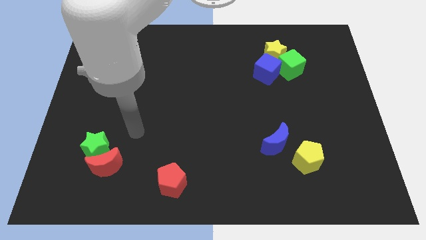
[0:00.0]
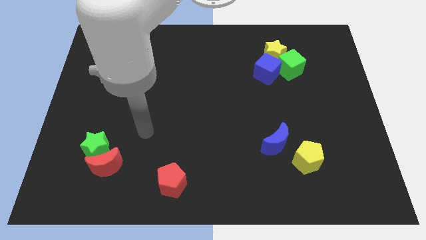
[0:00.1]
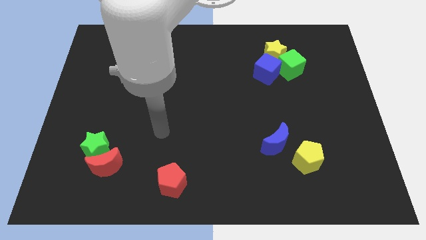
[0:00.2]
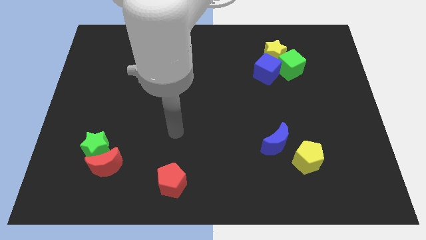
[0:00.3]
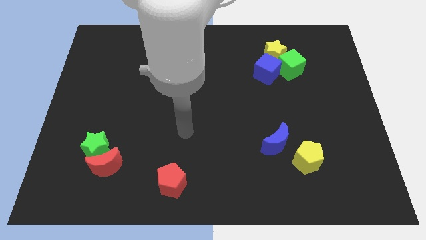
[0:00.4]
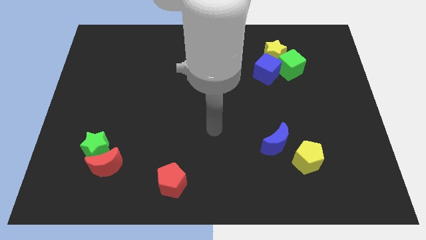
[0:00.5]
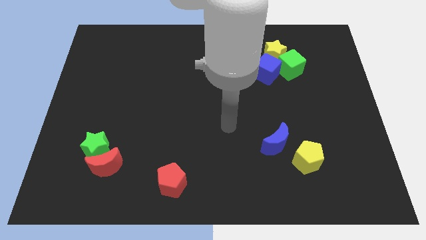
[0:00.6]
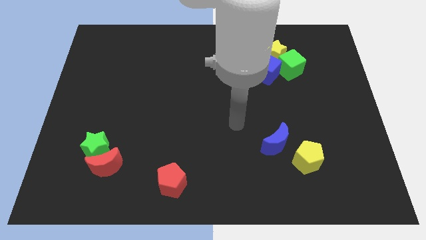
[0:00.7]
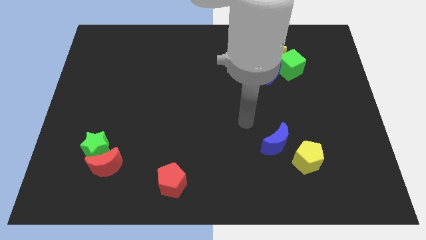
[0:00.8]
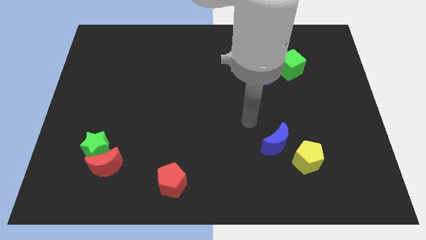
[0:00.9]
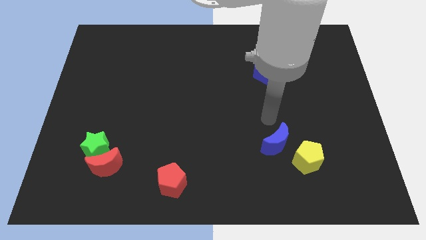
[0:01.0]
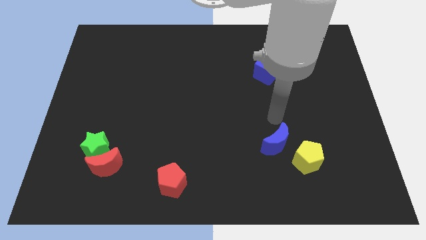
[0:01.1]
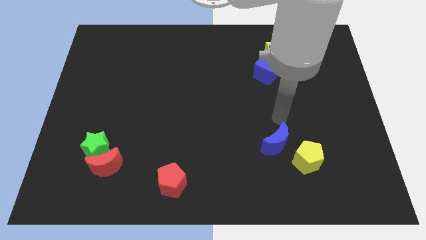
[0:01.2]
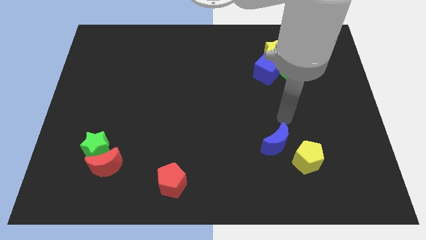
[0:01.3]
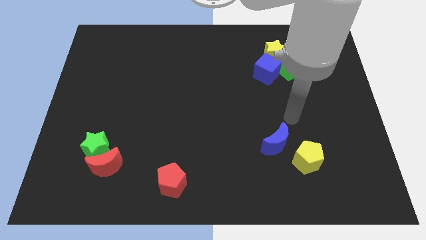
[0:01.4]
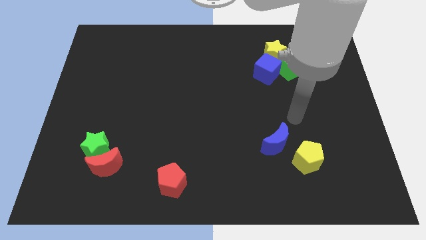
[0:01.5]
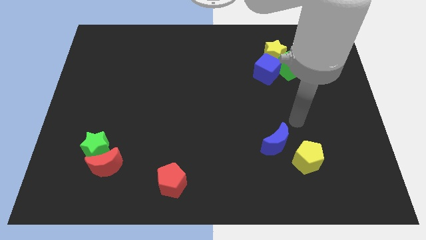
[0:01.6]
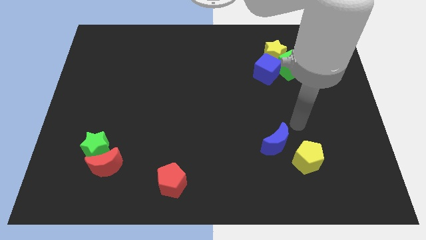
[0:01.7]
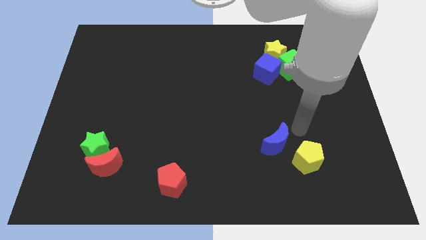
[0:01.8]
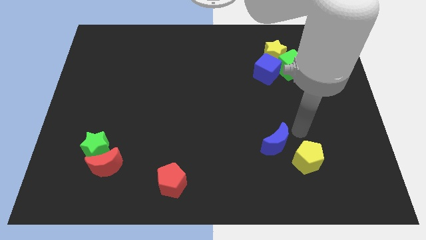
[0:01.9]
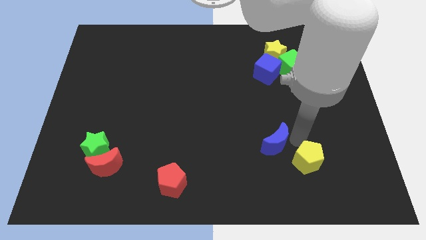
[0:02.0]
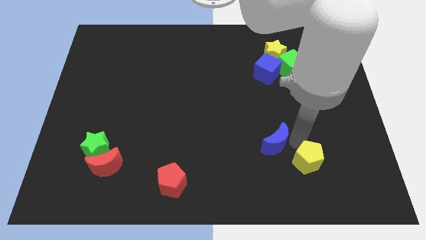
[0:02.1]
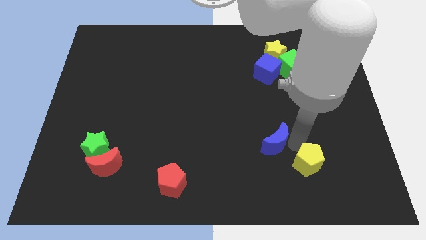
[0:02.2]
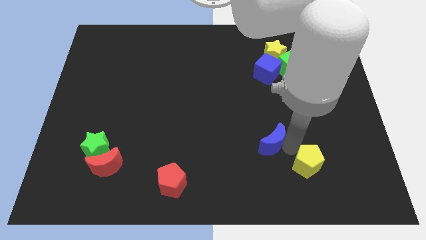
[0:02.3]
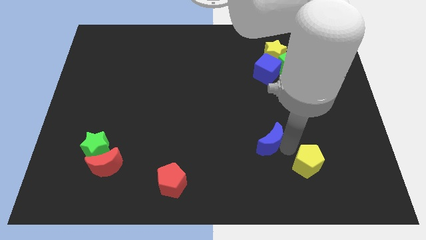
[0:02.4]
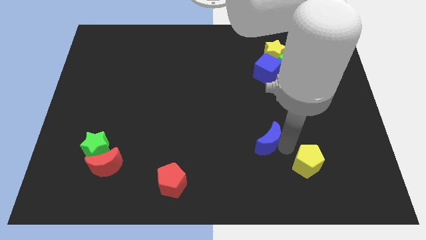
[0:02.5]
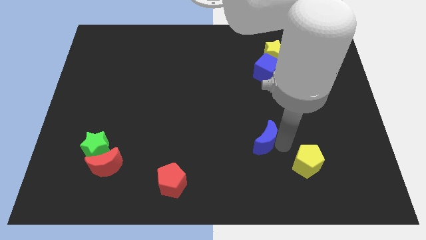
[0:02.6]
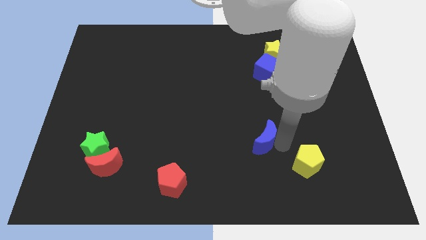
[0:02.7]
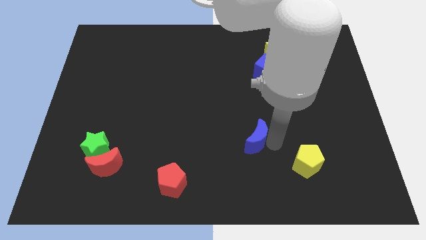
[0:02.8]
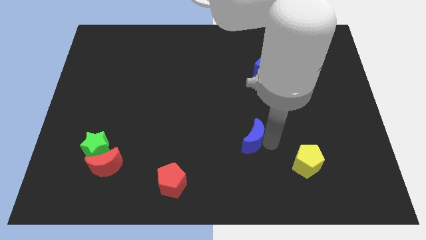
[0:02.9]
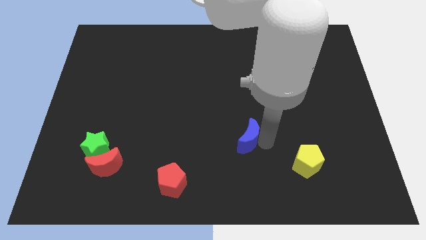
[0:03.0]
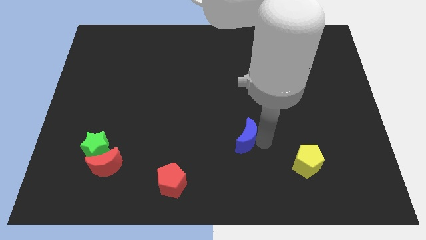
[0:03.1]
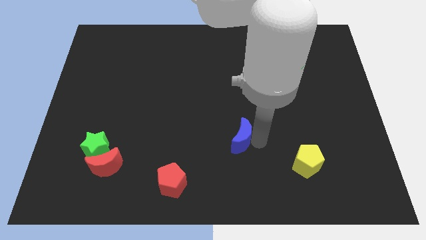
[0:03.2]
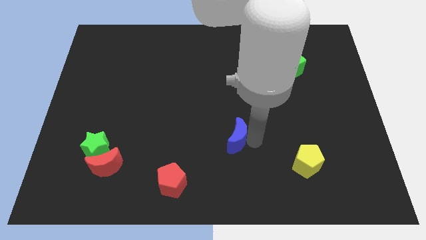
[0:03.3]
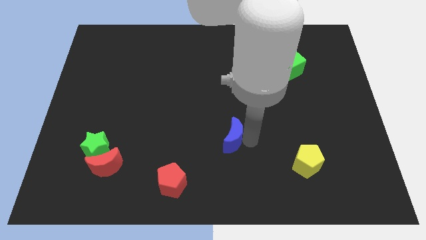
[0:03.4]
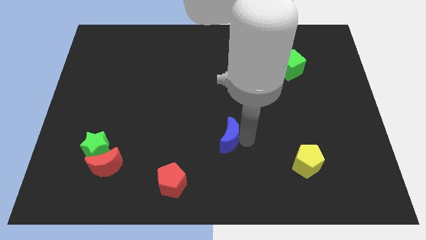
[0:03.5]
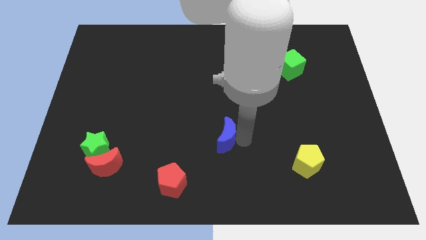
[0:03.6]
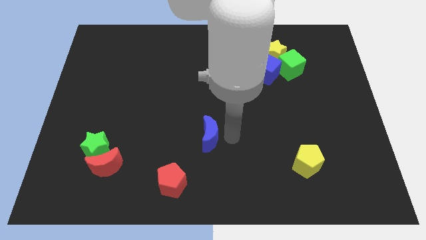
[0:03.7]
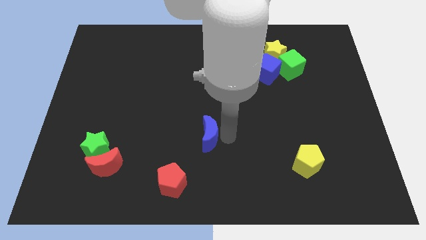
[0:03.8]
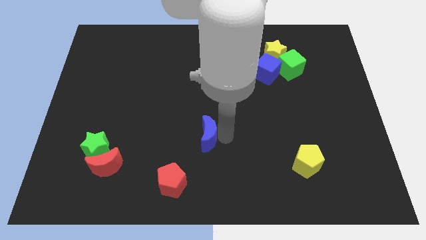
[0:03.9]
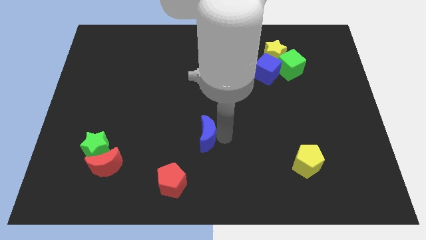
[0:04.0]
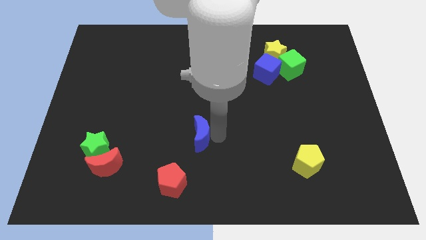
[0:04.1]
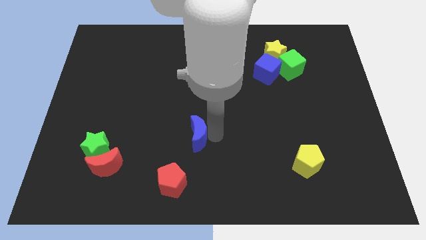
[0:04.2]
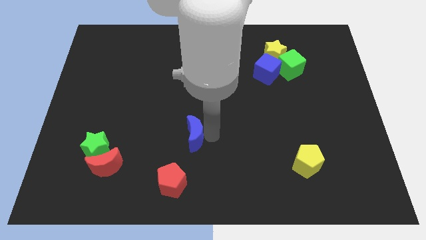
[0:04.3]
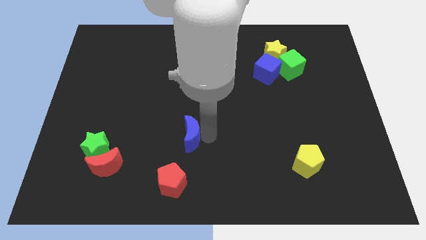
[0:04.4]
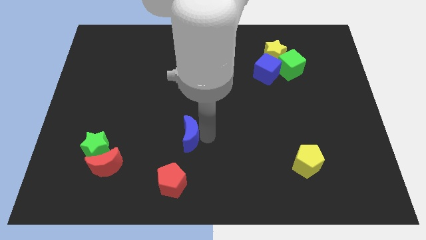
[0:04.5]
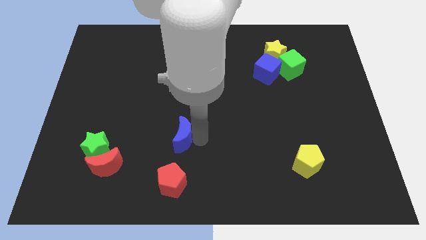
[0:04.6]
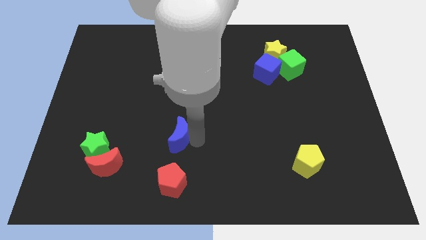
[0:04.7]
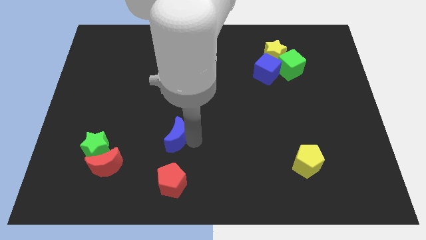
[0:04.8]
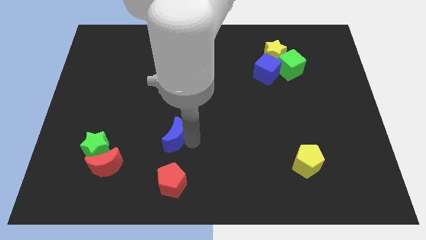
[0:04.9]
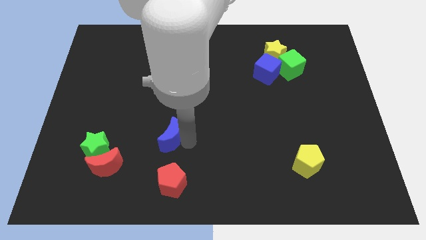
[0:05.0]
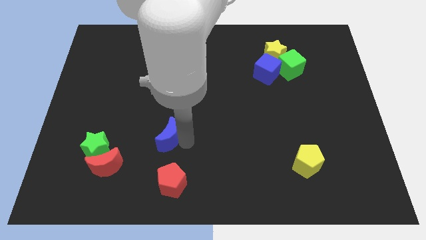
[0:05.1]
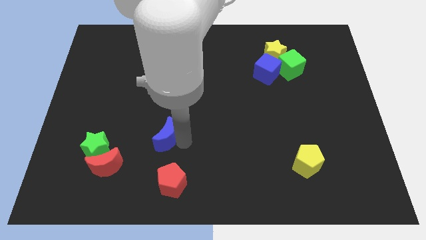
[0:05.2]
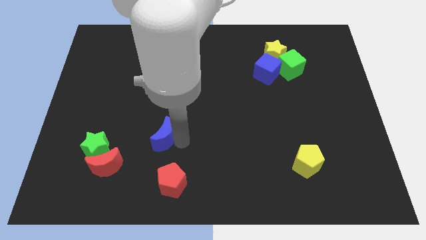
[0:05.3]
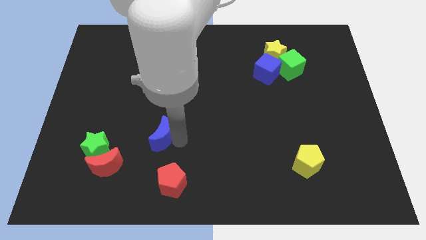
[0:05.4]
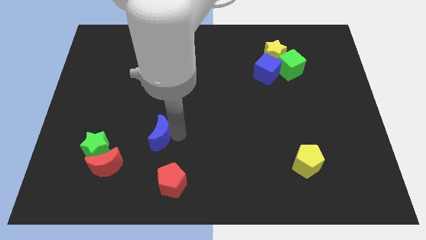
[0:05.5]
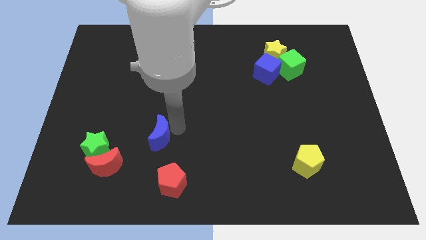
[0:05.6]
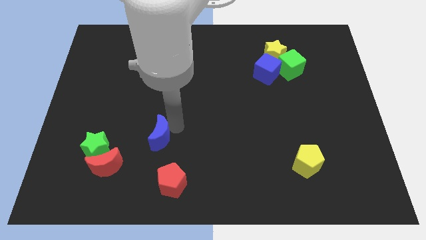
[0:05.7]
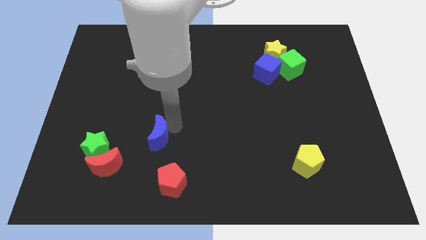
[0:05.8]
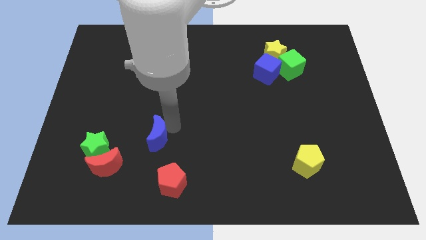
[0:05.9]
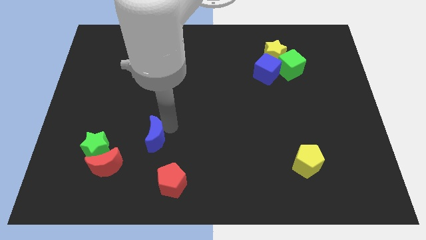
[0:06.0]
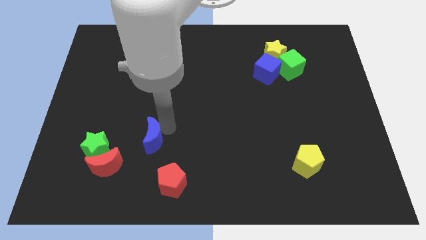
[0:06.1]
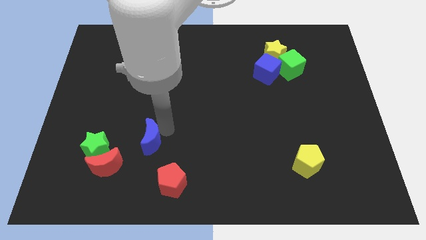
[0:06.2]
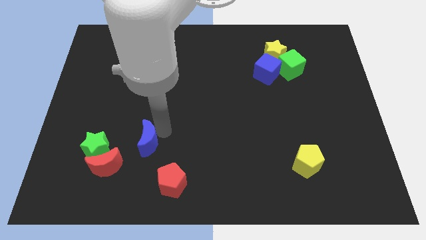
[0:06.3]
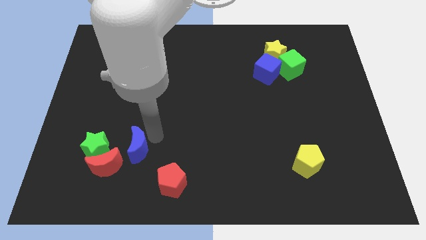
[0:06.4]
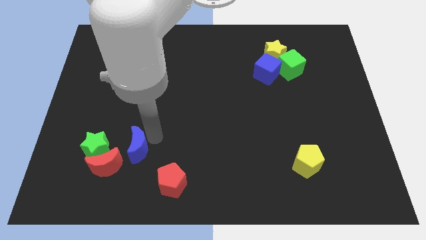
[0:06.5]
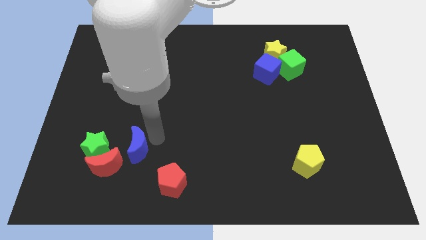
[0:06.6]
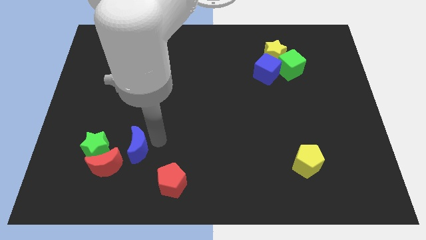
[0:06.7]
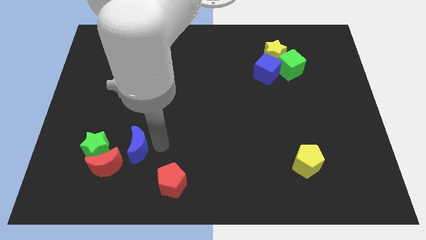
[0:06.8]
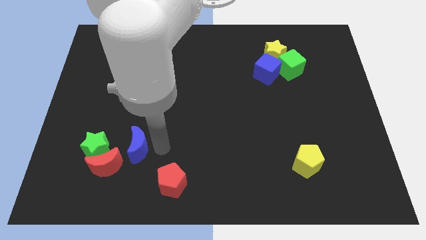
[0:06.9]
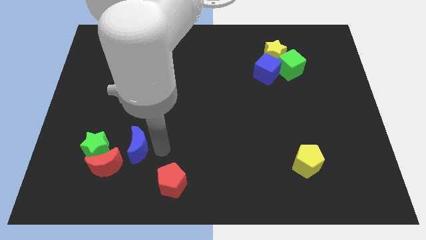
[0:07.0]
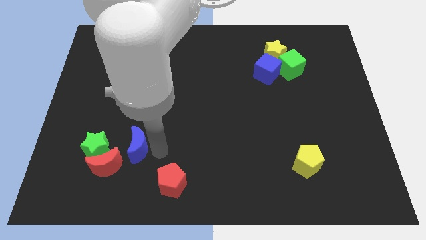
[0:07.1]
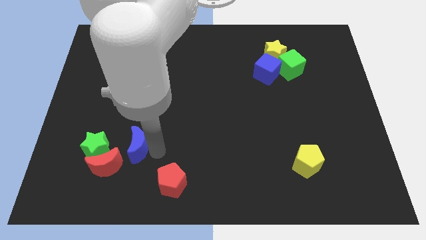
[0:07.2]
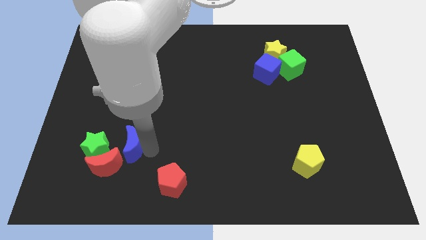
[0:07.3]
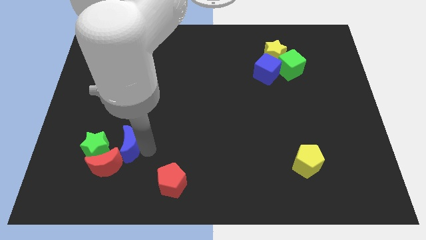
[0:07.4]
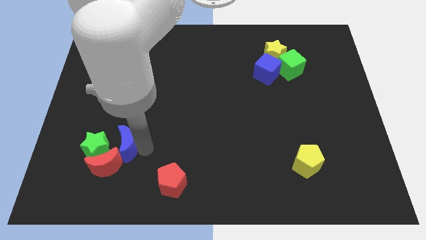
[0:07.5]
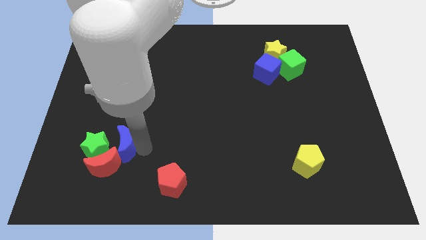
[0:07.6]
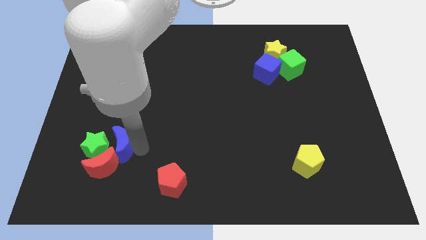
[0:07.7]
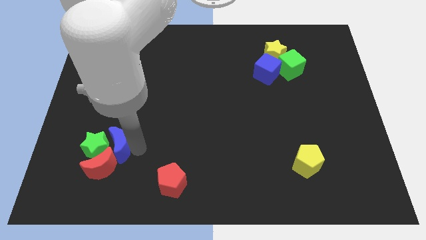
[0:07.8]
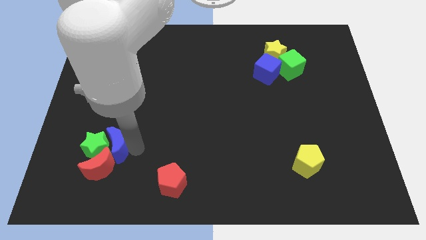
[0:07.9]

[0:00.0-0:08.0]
slide the blue moon next to the green star
